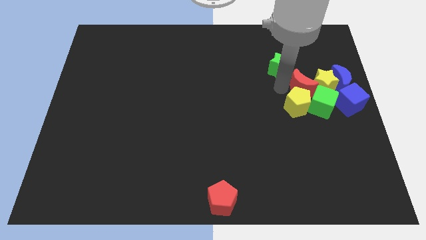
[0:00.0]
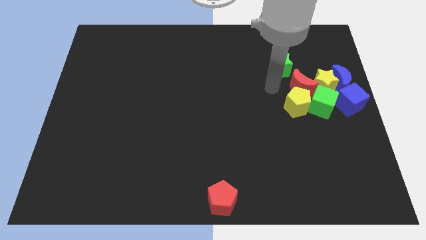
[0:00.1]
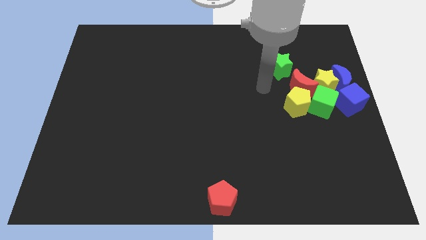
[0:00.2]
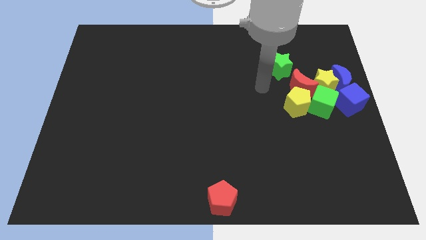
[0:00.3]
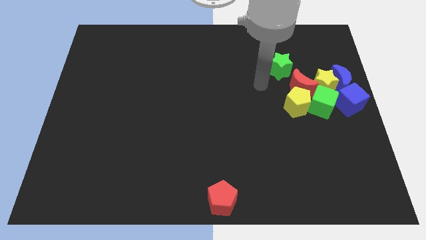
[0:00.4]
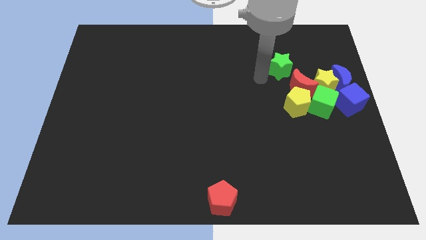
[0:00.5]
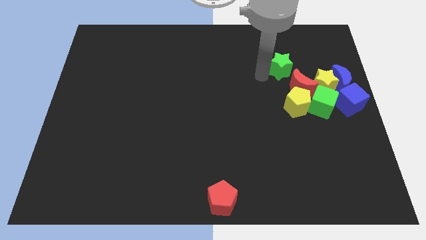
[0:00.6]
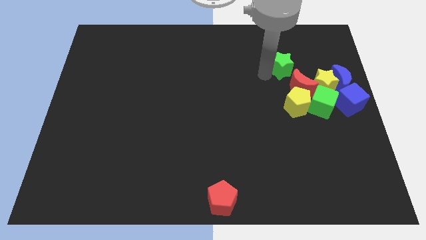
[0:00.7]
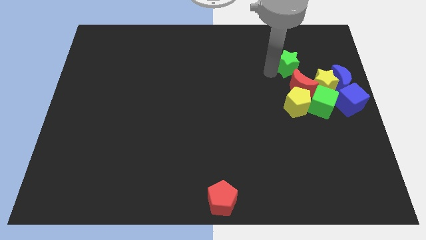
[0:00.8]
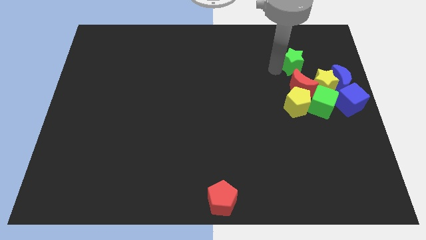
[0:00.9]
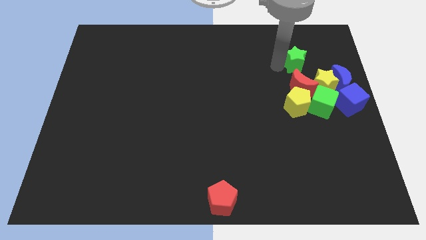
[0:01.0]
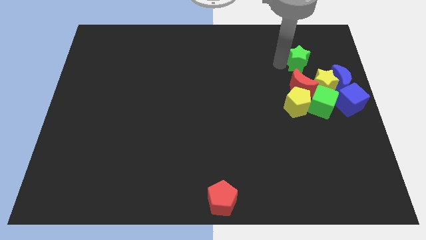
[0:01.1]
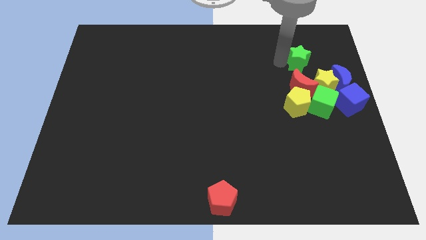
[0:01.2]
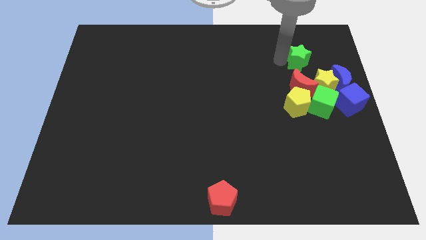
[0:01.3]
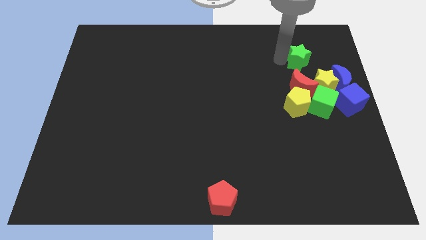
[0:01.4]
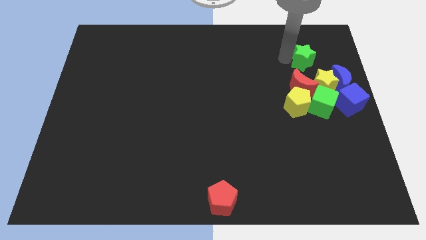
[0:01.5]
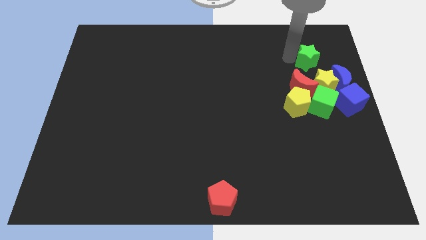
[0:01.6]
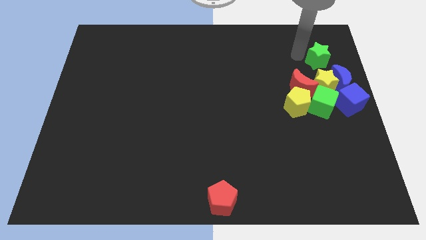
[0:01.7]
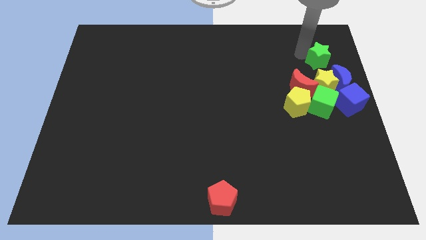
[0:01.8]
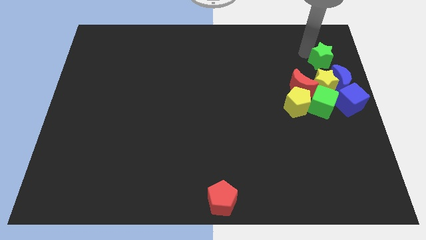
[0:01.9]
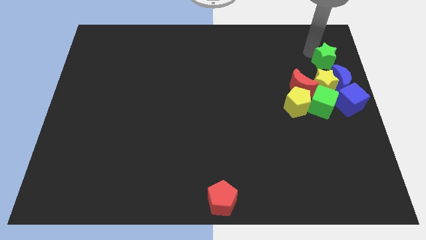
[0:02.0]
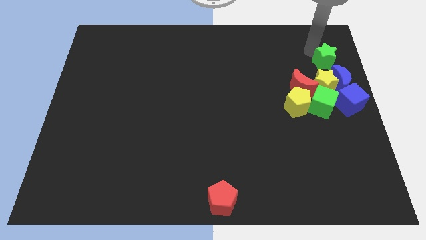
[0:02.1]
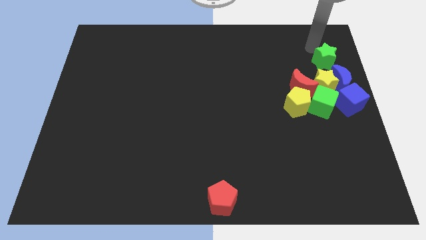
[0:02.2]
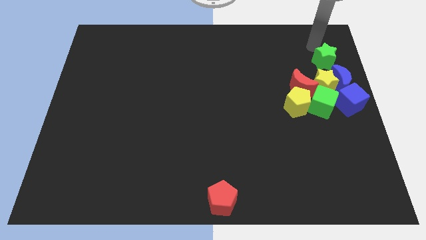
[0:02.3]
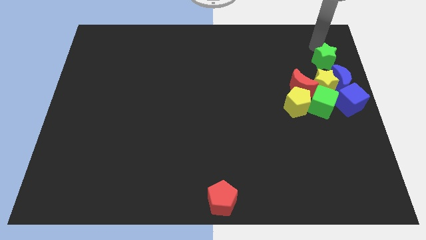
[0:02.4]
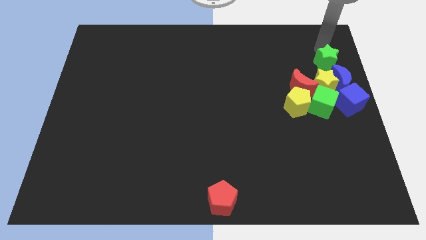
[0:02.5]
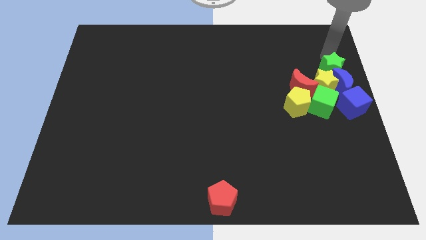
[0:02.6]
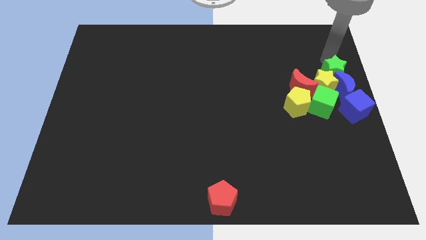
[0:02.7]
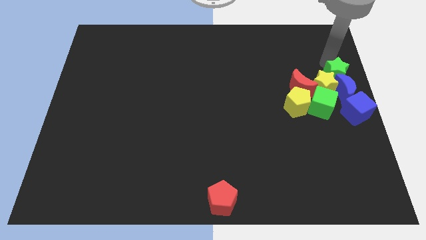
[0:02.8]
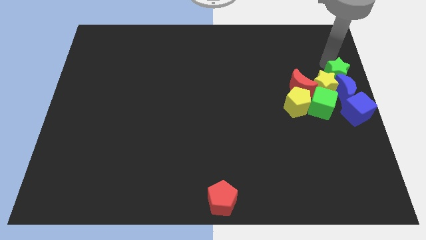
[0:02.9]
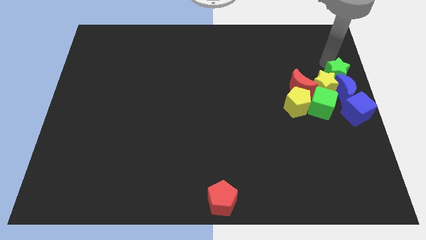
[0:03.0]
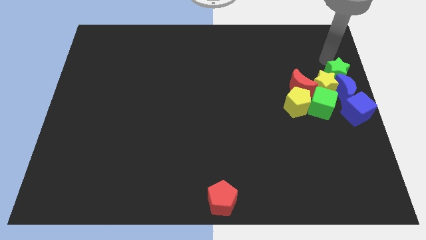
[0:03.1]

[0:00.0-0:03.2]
push the green star into the top side of the blue moon

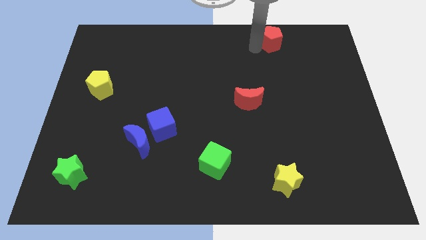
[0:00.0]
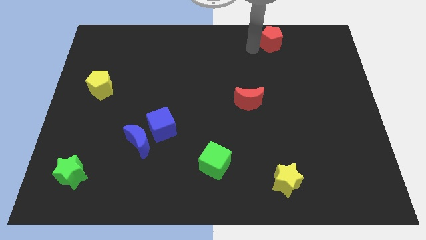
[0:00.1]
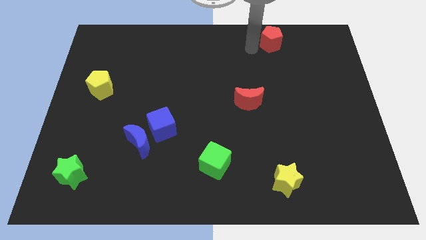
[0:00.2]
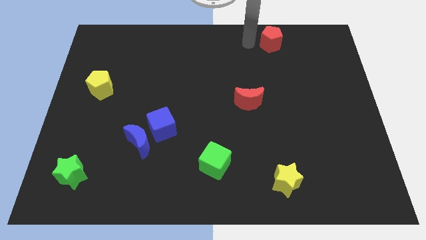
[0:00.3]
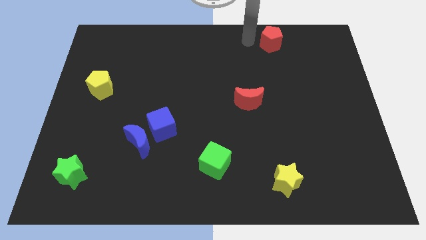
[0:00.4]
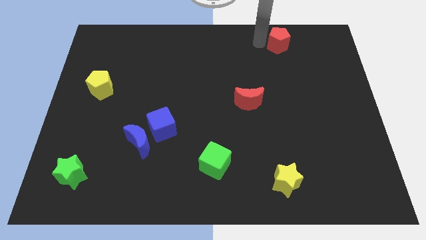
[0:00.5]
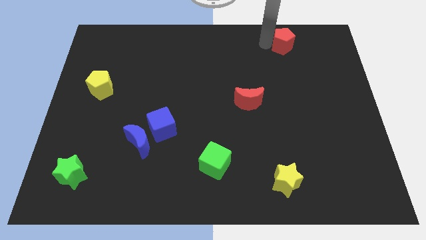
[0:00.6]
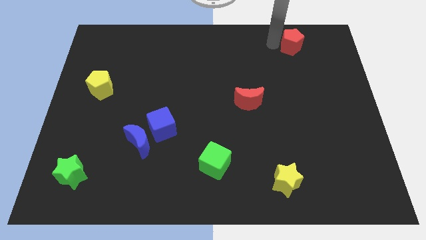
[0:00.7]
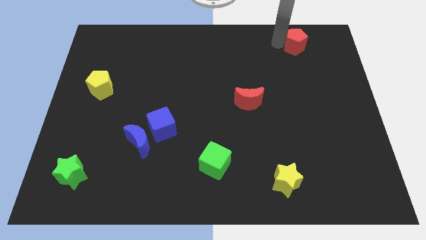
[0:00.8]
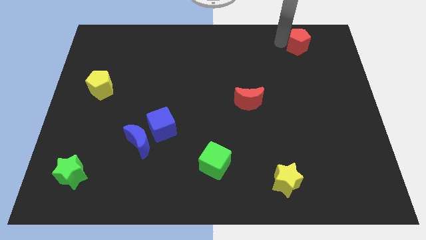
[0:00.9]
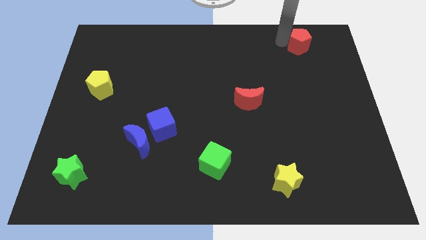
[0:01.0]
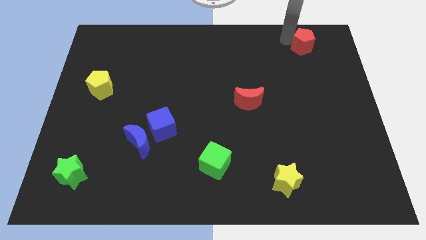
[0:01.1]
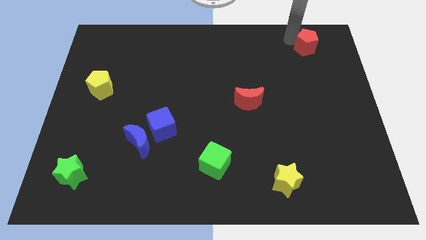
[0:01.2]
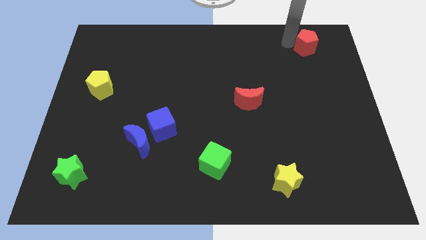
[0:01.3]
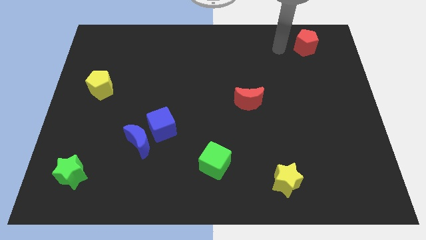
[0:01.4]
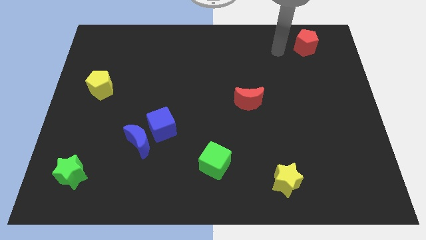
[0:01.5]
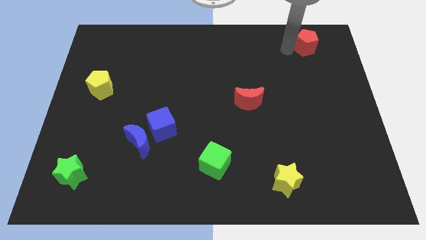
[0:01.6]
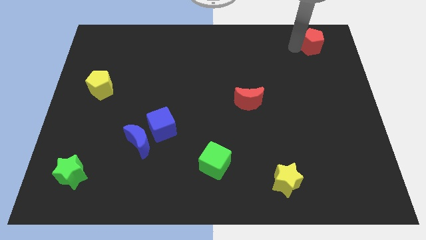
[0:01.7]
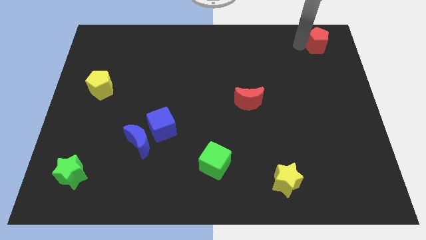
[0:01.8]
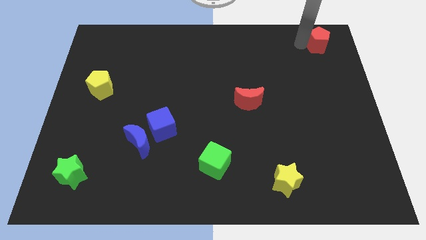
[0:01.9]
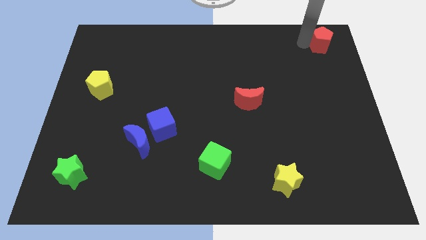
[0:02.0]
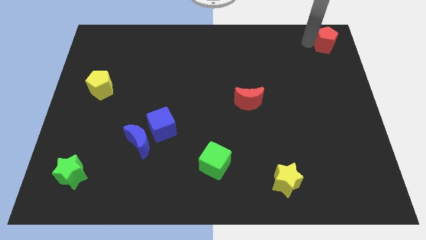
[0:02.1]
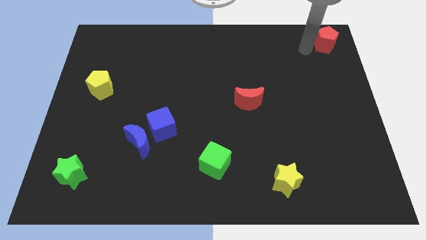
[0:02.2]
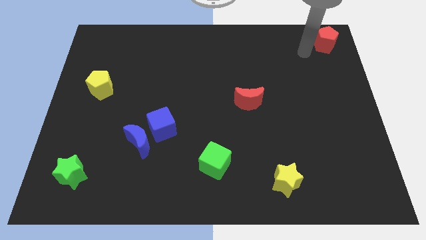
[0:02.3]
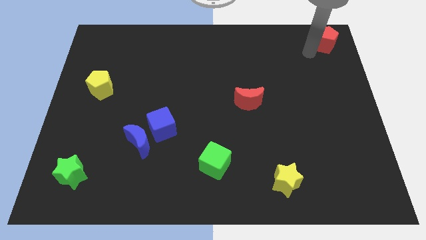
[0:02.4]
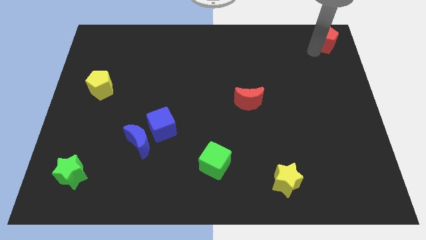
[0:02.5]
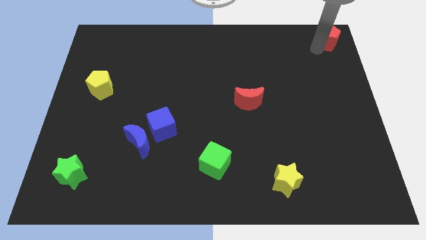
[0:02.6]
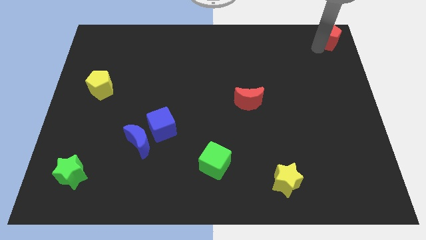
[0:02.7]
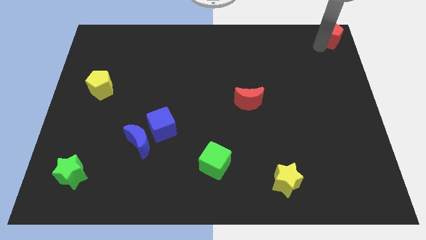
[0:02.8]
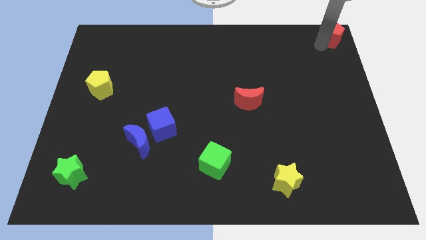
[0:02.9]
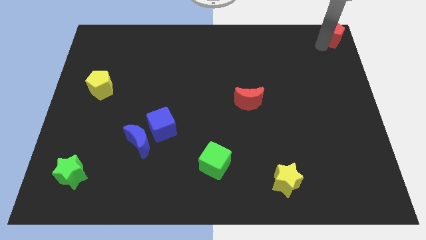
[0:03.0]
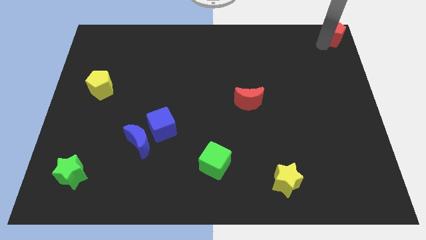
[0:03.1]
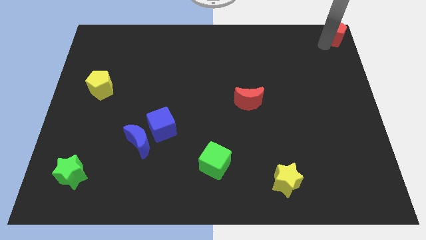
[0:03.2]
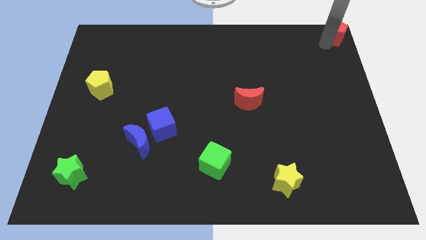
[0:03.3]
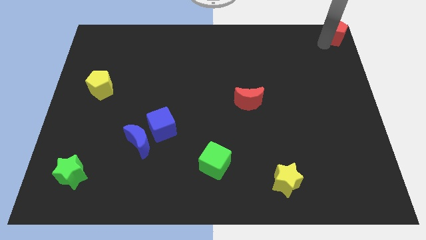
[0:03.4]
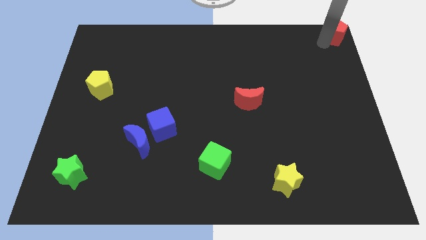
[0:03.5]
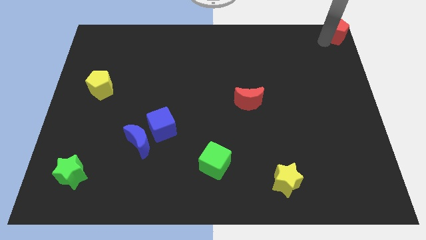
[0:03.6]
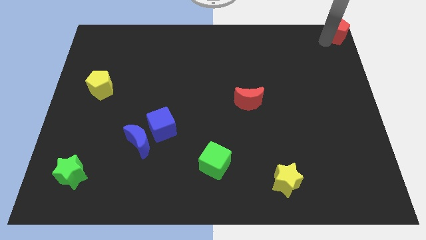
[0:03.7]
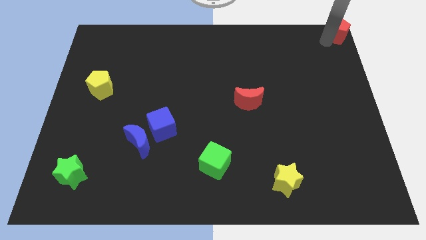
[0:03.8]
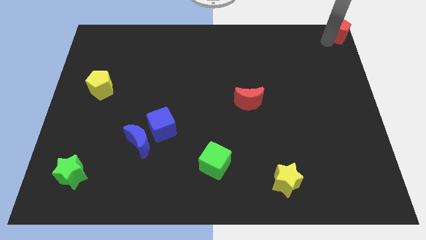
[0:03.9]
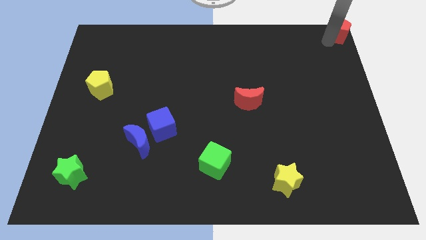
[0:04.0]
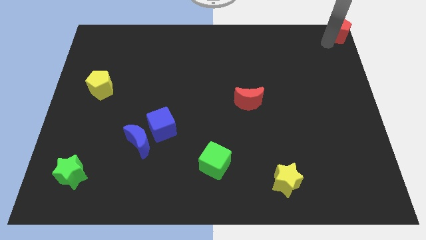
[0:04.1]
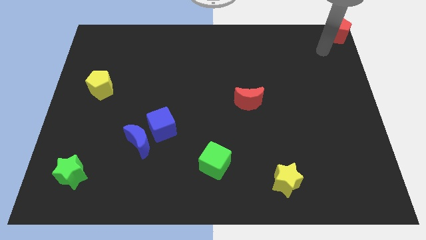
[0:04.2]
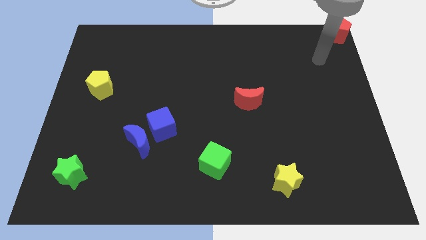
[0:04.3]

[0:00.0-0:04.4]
push the red pentagon to the top right corner of the board

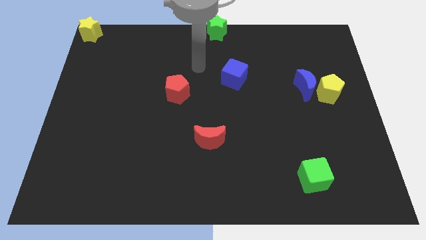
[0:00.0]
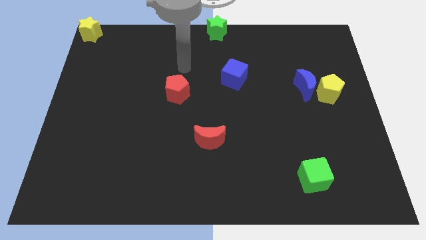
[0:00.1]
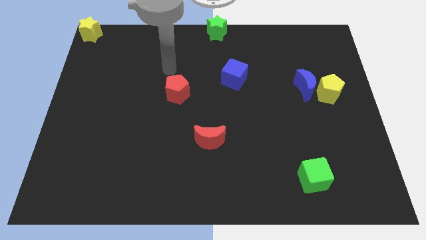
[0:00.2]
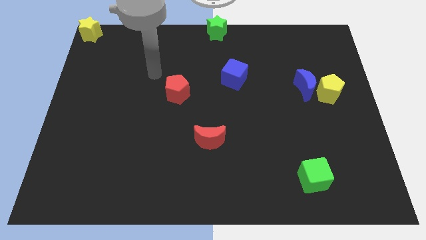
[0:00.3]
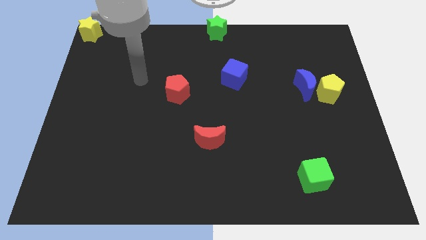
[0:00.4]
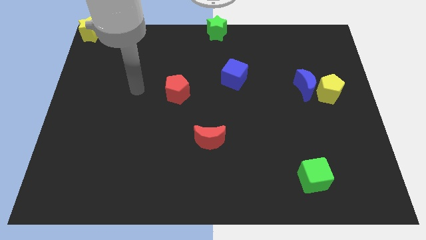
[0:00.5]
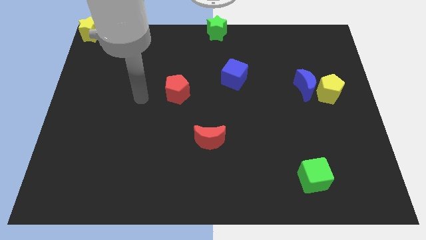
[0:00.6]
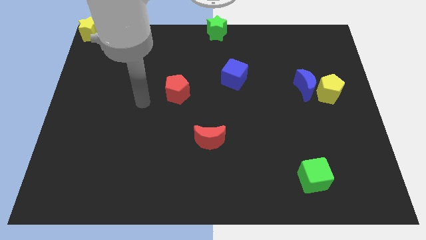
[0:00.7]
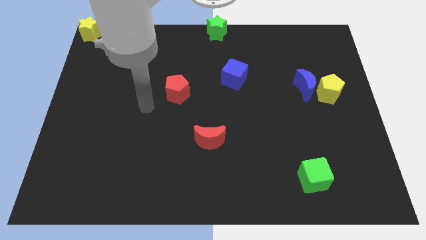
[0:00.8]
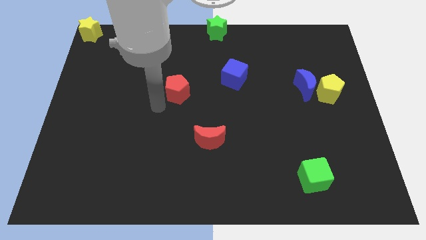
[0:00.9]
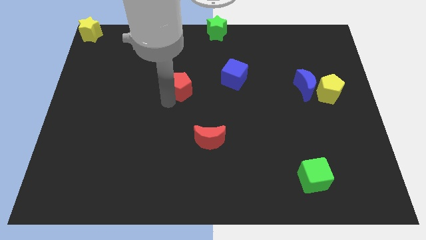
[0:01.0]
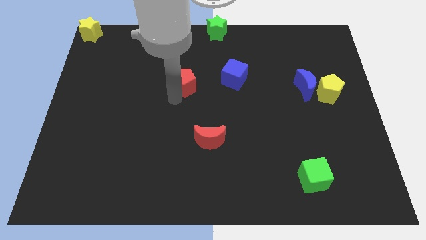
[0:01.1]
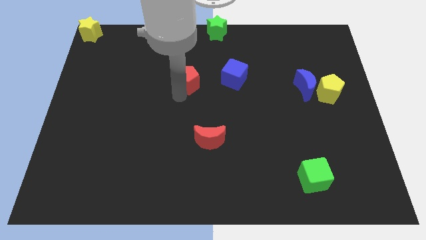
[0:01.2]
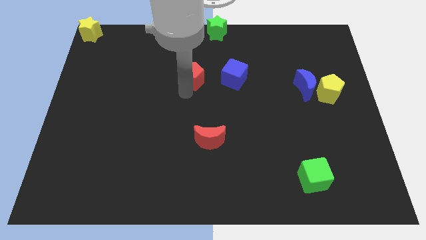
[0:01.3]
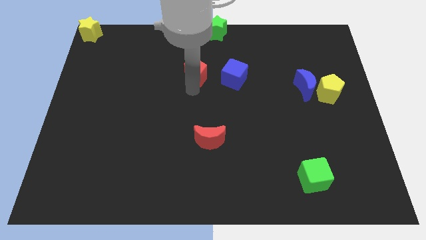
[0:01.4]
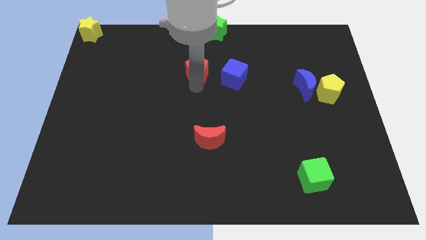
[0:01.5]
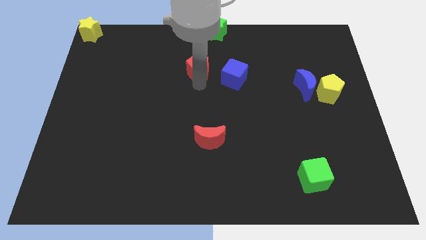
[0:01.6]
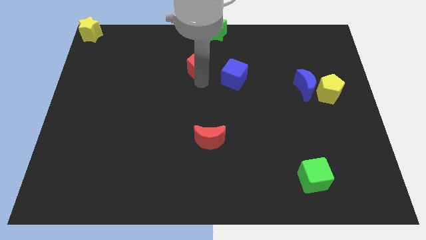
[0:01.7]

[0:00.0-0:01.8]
place the red pentagon to the left of the blue cube
